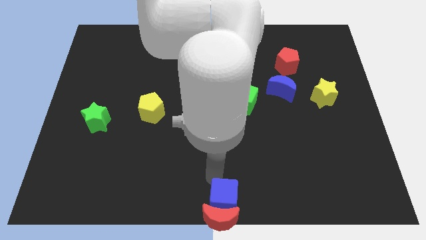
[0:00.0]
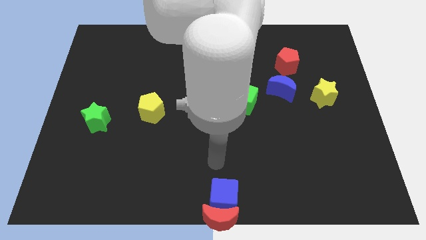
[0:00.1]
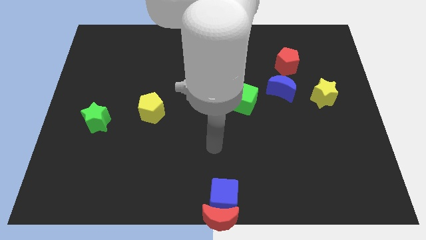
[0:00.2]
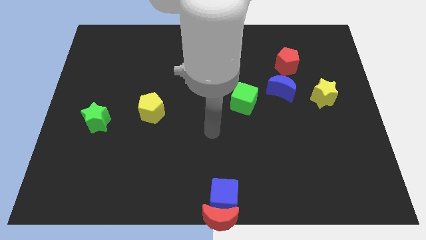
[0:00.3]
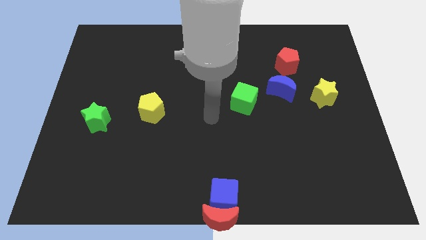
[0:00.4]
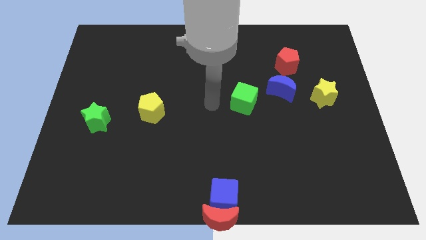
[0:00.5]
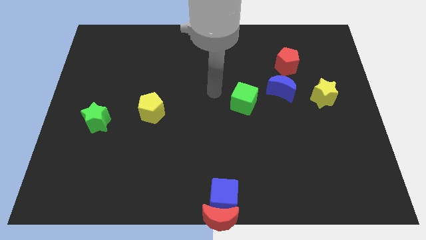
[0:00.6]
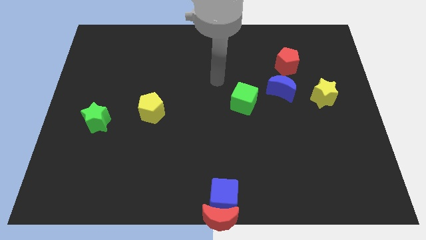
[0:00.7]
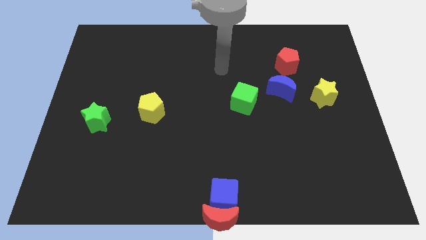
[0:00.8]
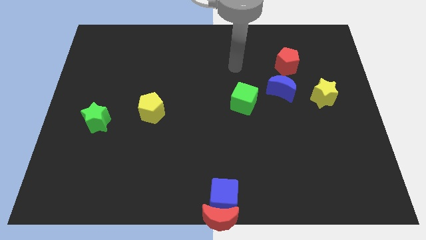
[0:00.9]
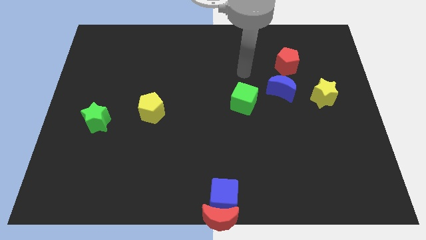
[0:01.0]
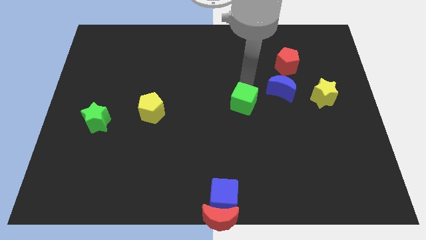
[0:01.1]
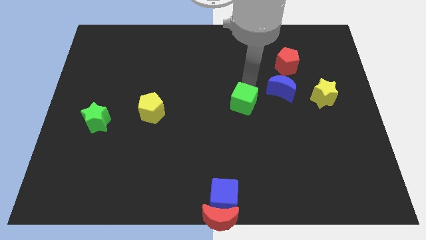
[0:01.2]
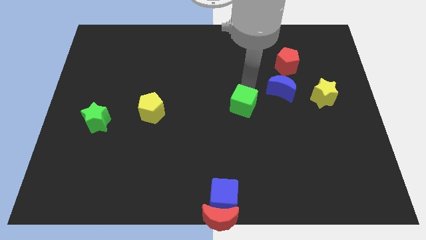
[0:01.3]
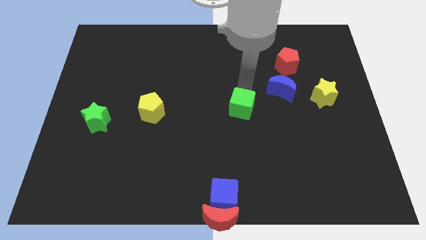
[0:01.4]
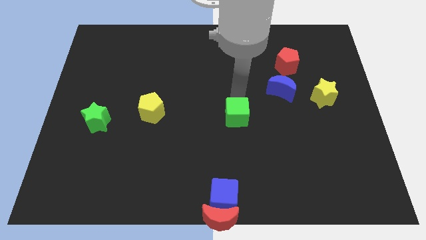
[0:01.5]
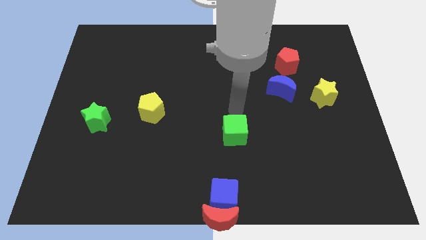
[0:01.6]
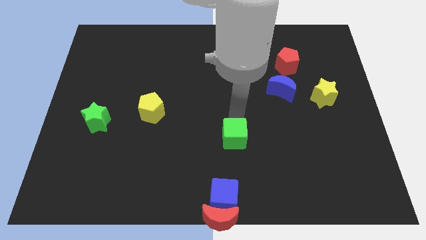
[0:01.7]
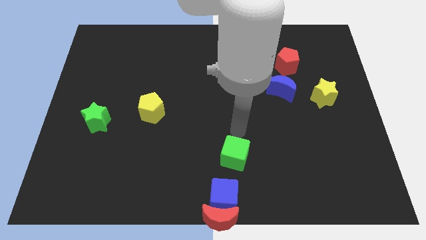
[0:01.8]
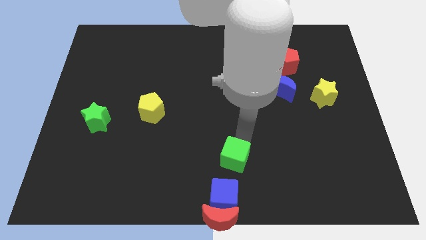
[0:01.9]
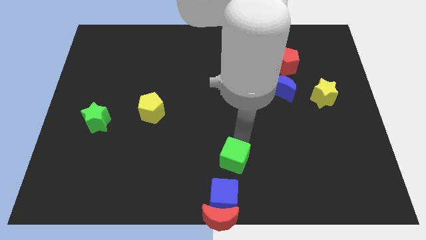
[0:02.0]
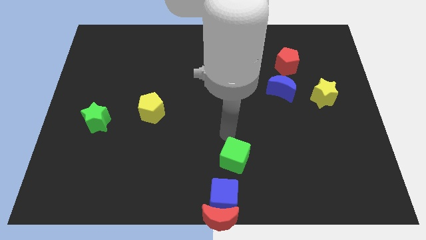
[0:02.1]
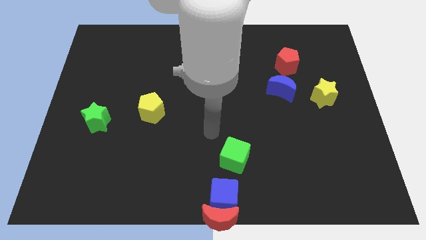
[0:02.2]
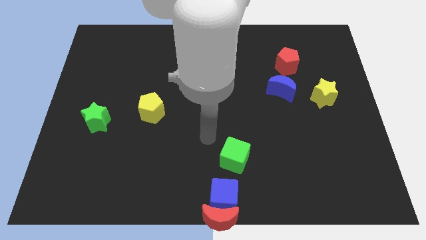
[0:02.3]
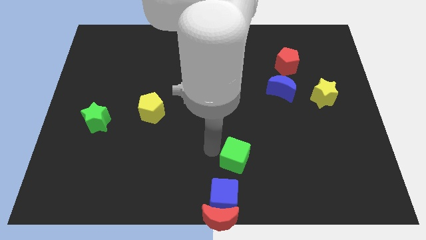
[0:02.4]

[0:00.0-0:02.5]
push the green cube closer to the blue cube

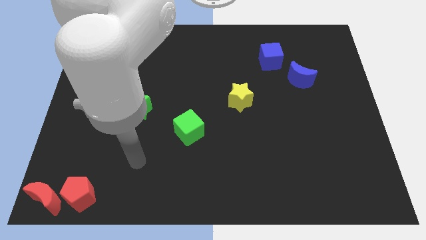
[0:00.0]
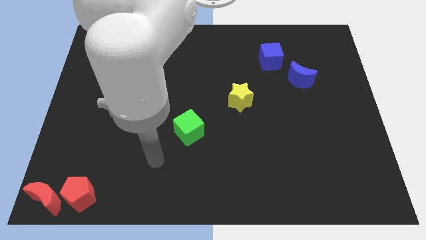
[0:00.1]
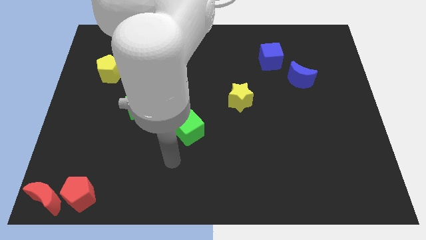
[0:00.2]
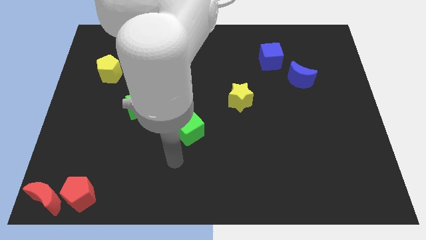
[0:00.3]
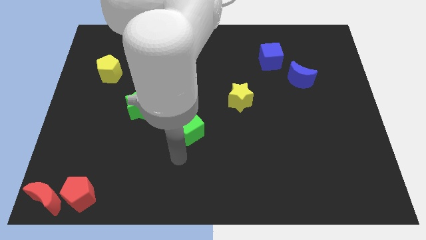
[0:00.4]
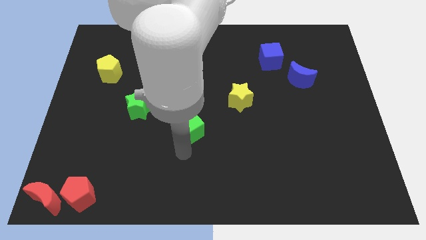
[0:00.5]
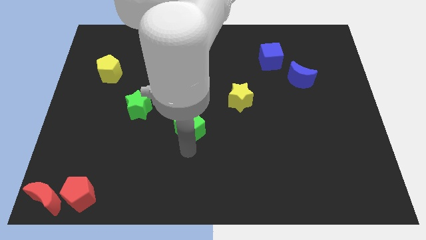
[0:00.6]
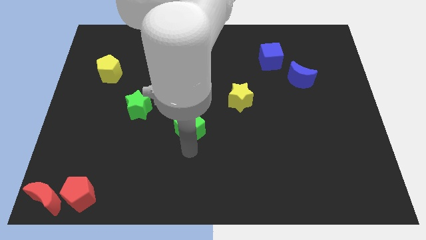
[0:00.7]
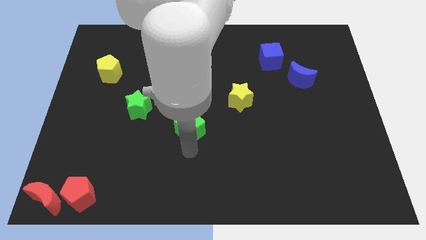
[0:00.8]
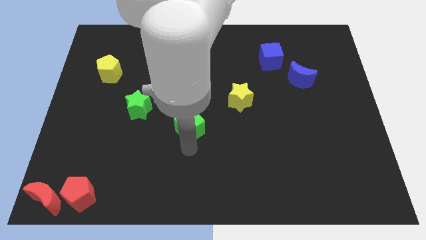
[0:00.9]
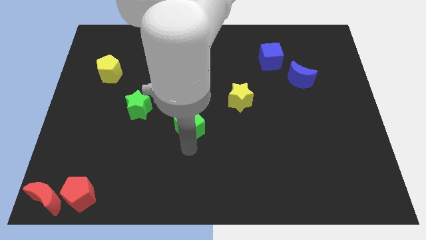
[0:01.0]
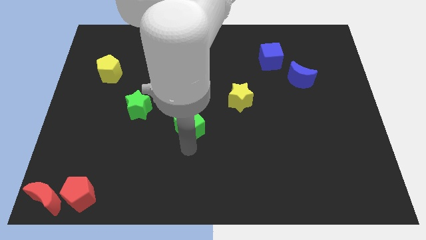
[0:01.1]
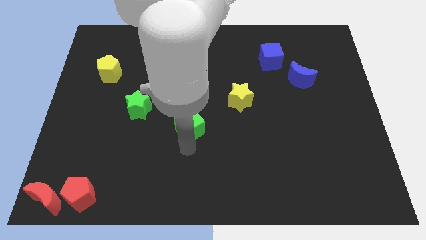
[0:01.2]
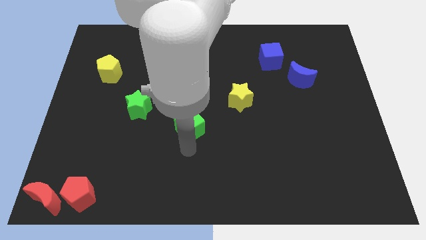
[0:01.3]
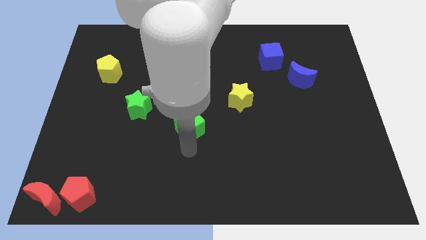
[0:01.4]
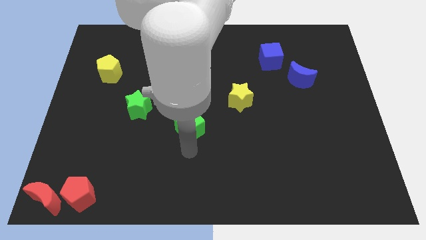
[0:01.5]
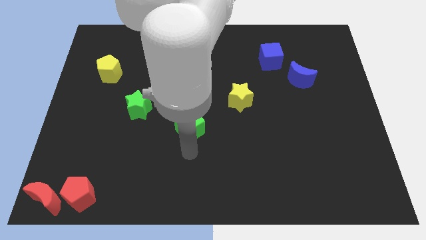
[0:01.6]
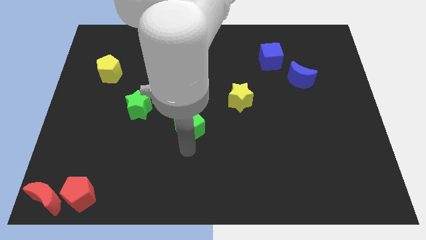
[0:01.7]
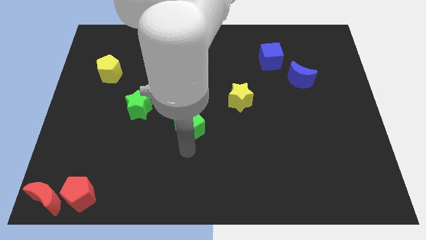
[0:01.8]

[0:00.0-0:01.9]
slightly move the green star towards the top of the board

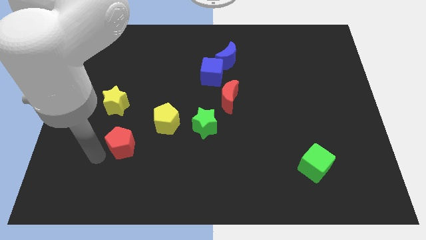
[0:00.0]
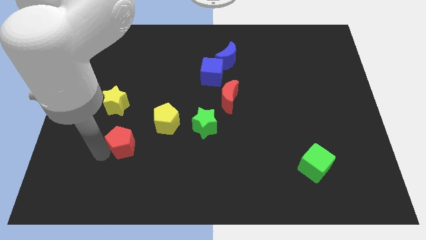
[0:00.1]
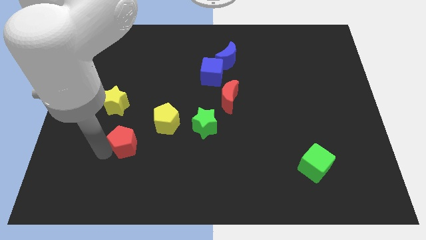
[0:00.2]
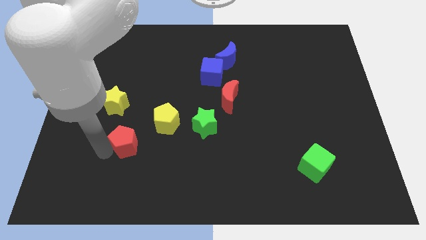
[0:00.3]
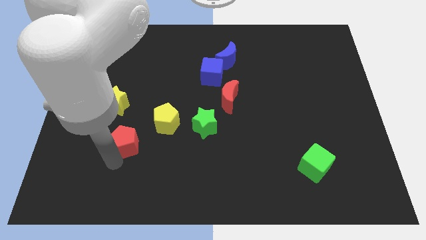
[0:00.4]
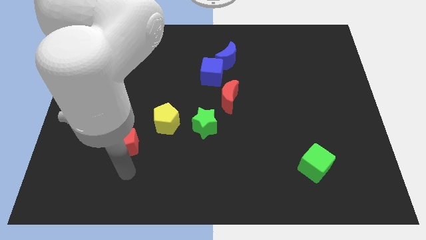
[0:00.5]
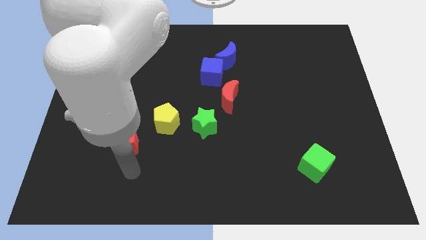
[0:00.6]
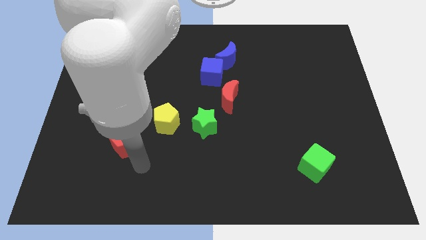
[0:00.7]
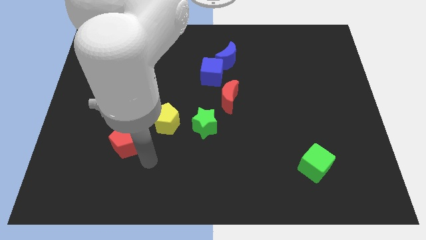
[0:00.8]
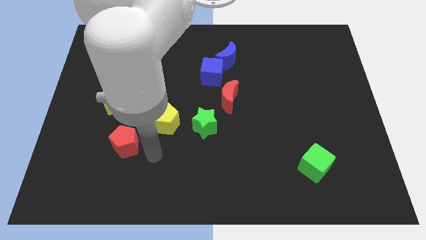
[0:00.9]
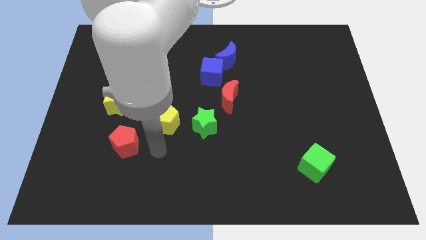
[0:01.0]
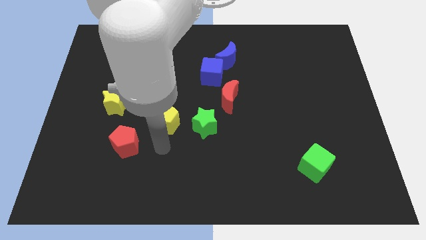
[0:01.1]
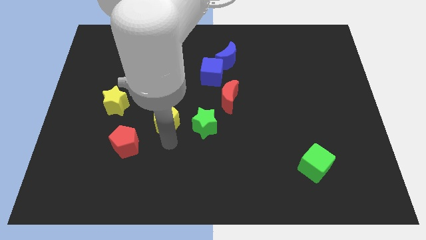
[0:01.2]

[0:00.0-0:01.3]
place the red pentagon below the yellow pentagon and yellow star to form a triangle

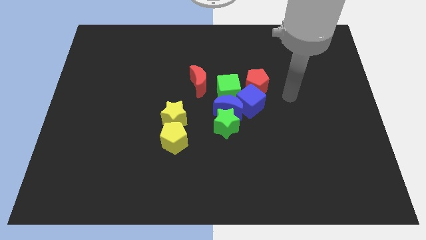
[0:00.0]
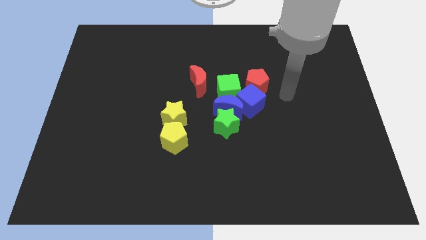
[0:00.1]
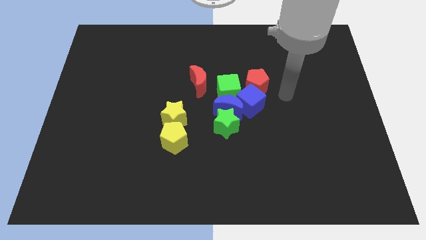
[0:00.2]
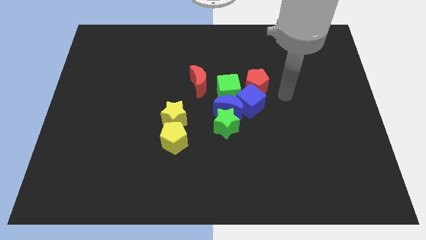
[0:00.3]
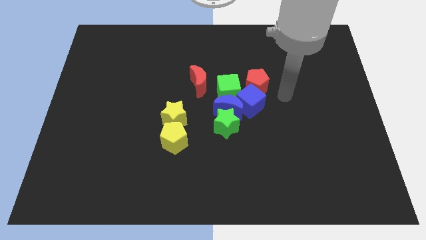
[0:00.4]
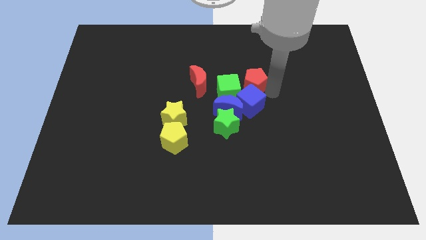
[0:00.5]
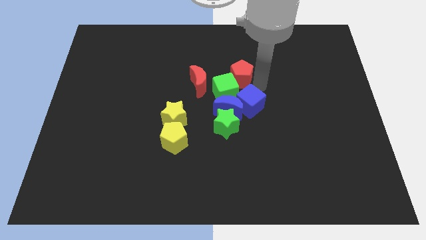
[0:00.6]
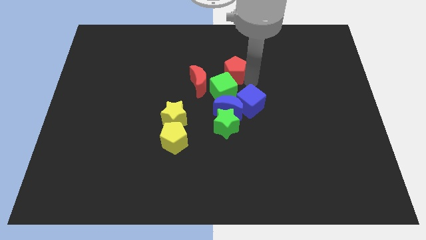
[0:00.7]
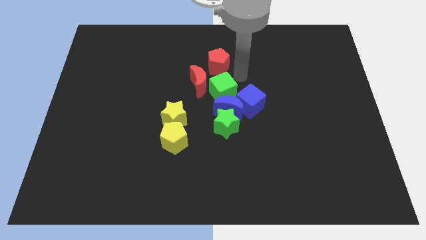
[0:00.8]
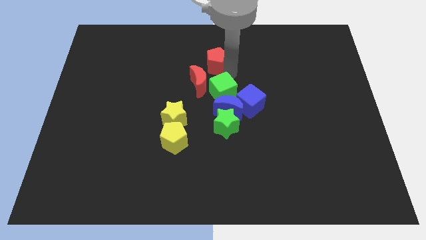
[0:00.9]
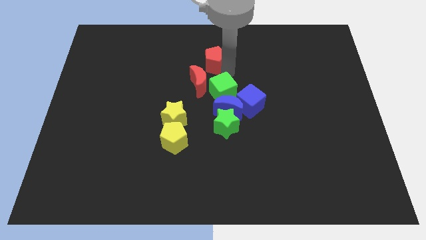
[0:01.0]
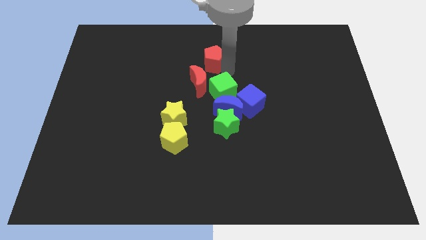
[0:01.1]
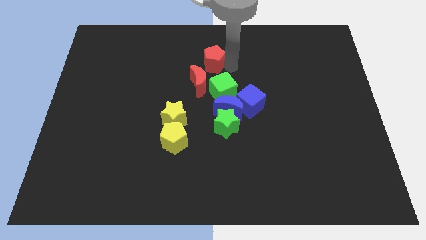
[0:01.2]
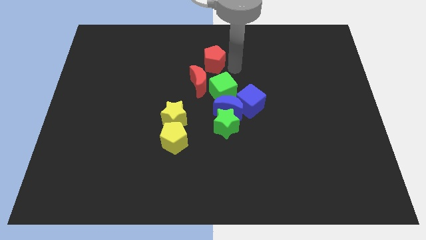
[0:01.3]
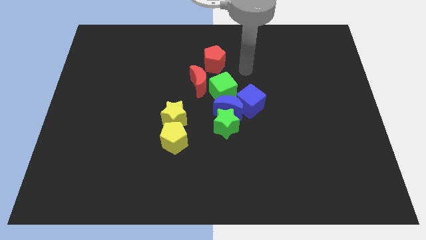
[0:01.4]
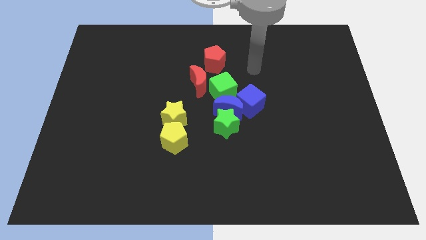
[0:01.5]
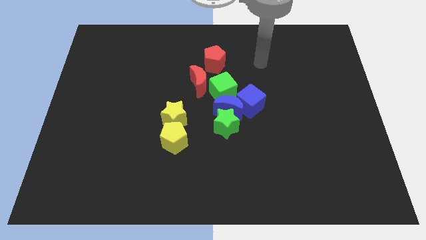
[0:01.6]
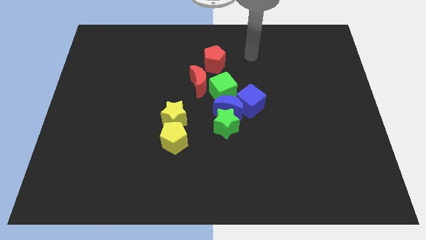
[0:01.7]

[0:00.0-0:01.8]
move the red pentagon up slightly towards the top

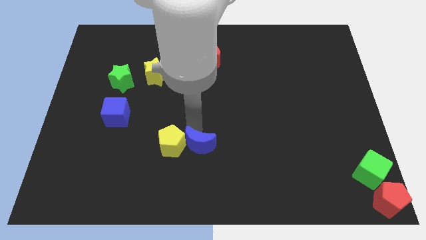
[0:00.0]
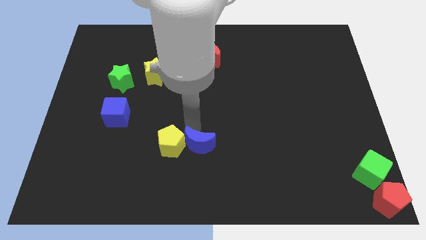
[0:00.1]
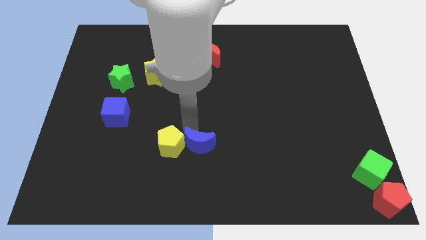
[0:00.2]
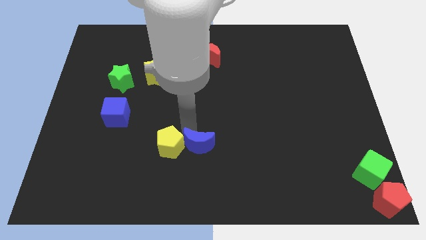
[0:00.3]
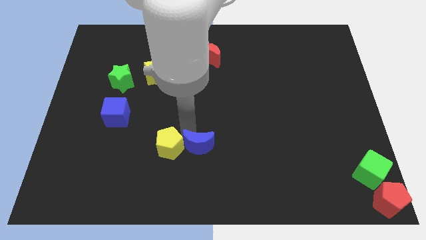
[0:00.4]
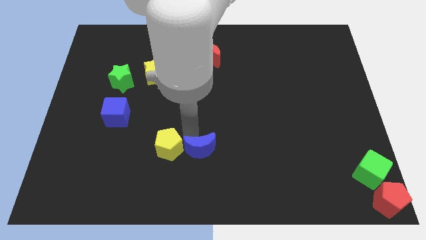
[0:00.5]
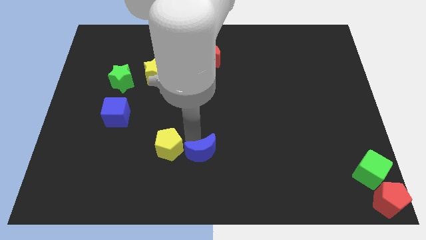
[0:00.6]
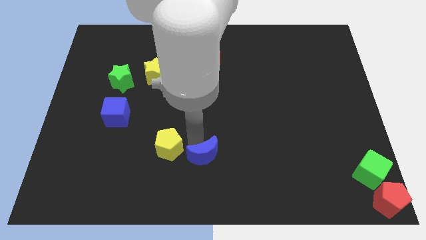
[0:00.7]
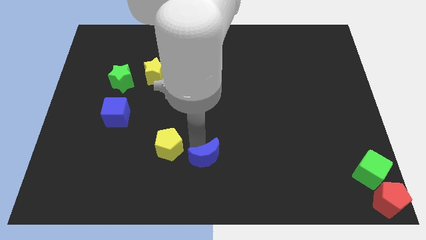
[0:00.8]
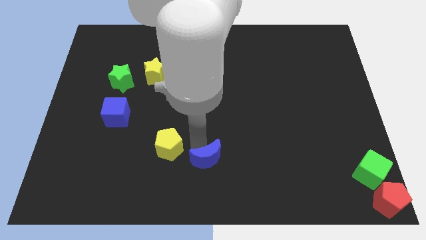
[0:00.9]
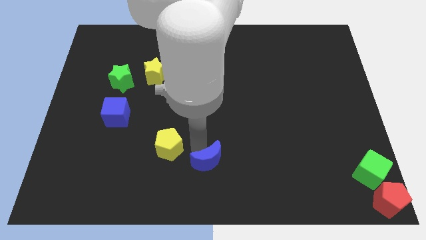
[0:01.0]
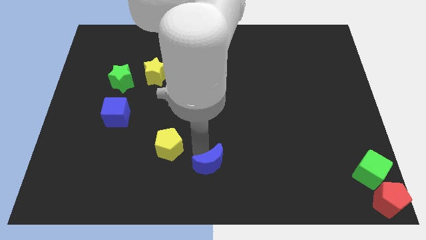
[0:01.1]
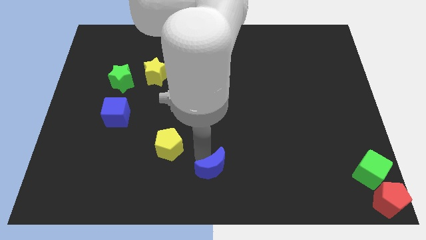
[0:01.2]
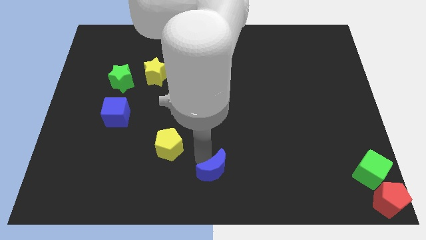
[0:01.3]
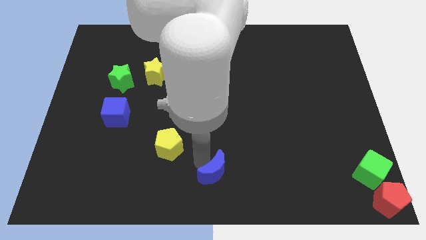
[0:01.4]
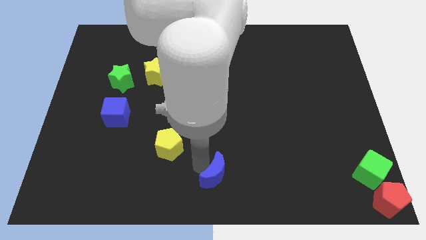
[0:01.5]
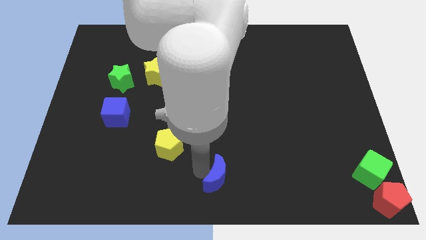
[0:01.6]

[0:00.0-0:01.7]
separate the blue crescent from the yellow pentagon
